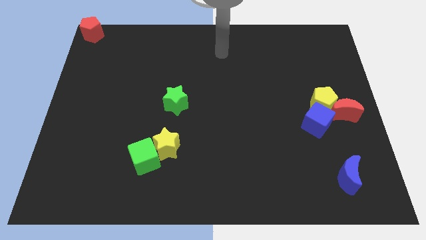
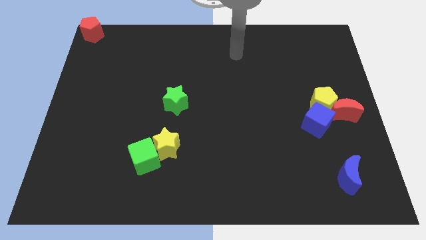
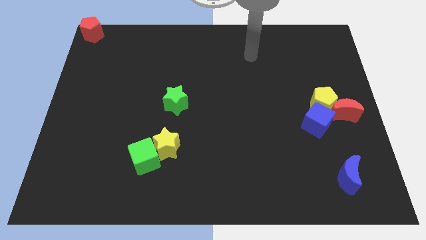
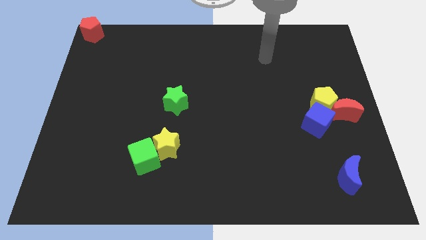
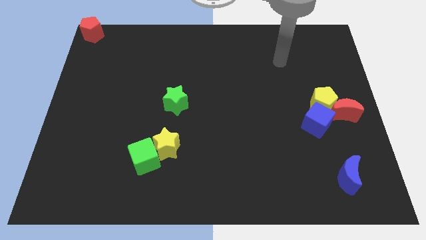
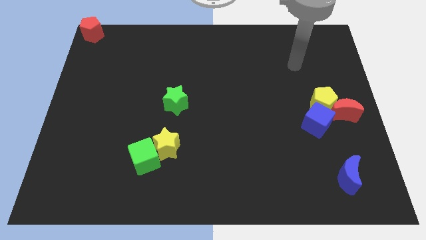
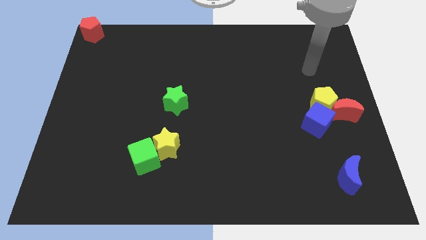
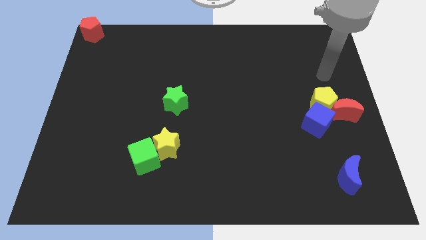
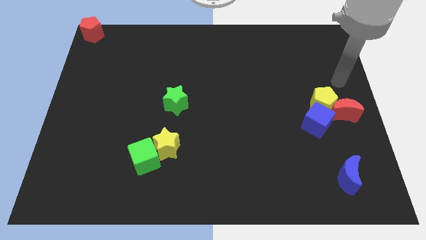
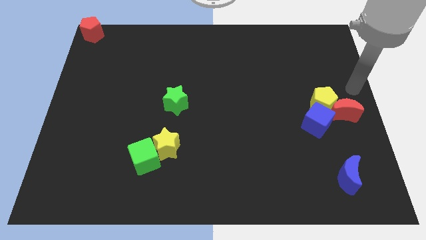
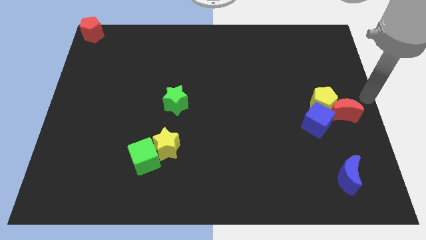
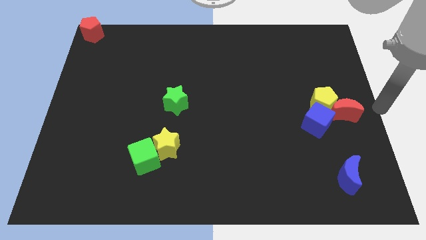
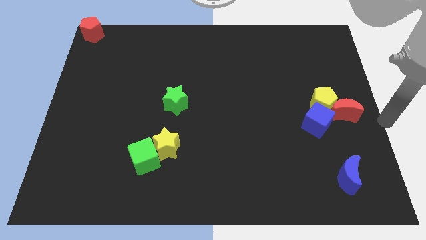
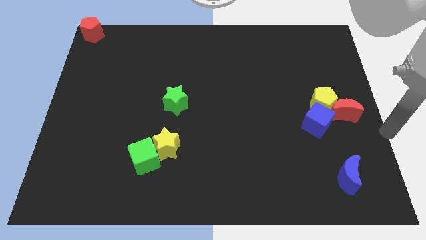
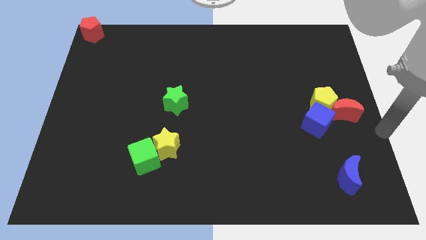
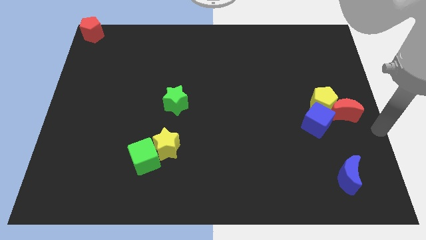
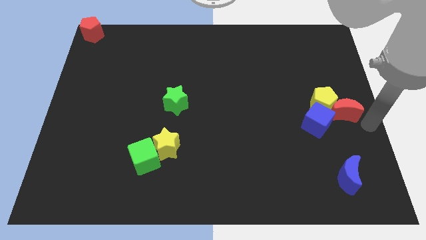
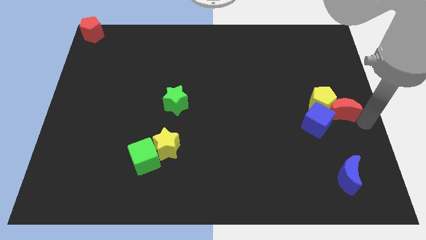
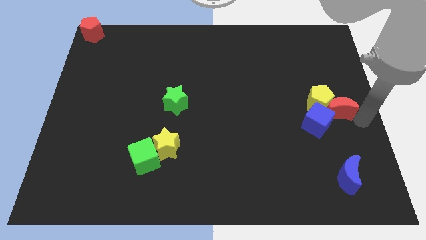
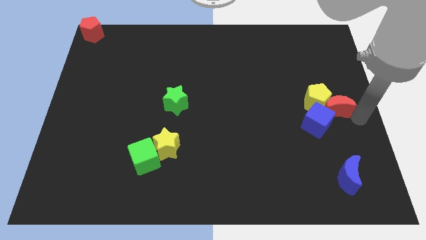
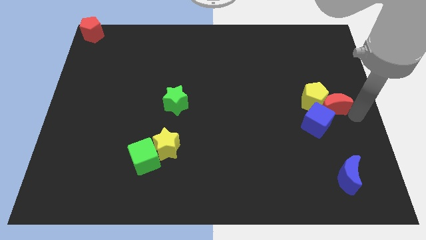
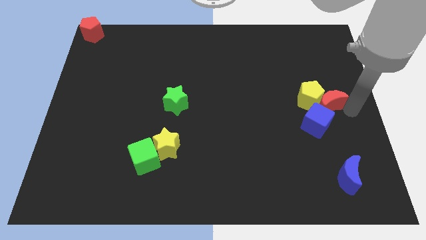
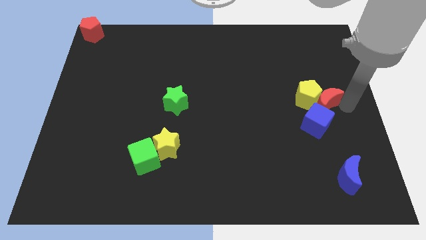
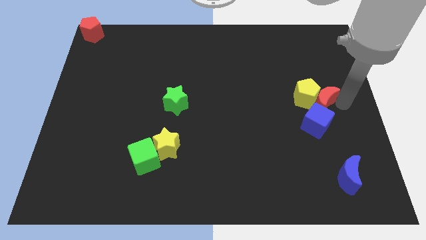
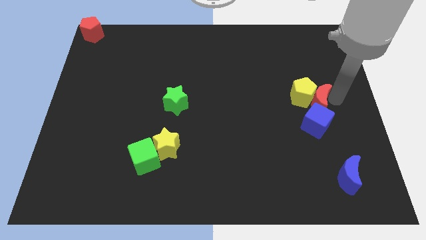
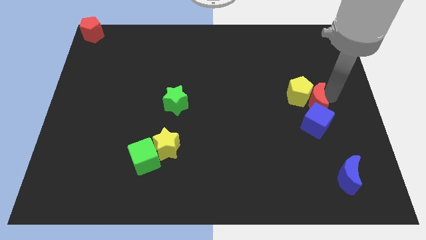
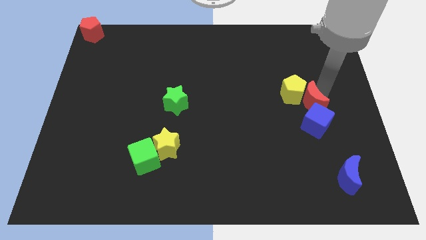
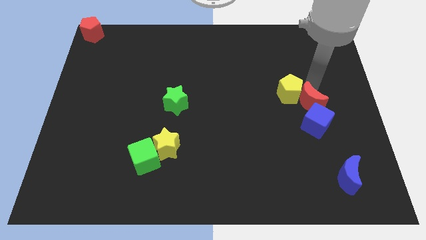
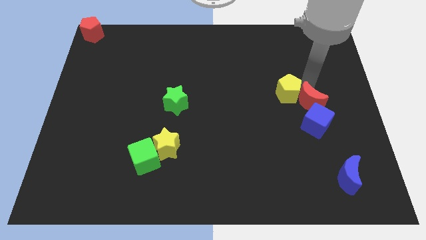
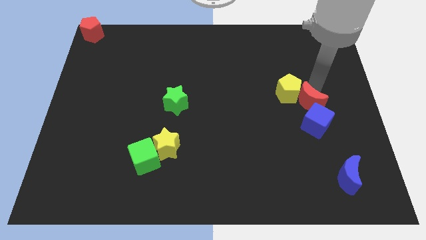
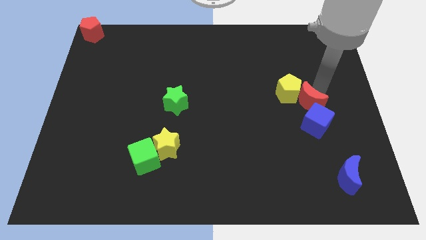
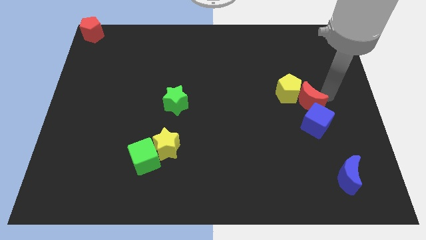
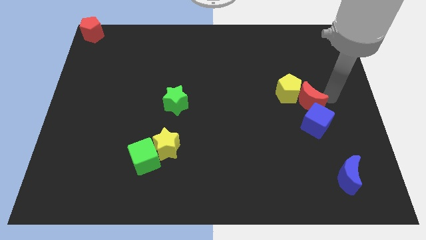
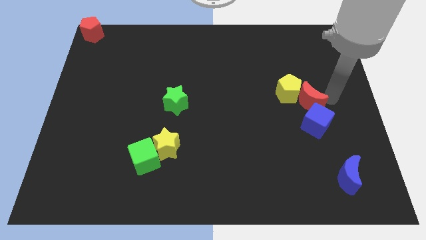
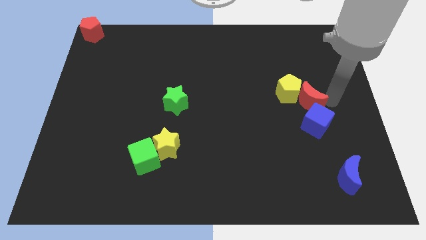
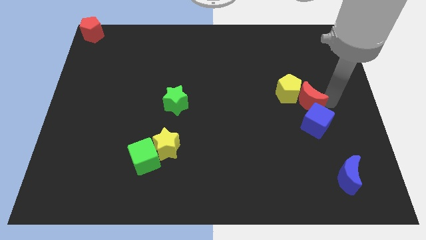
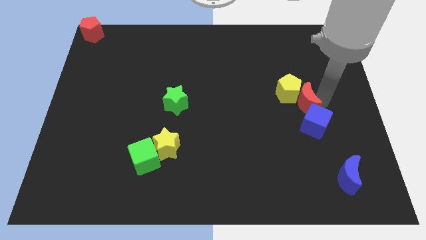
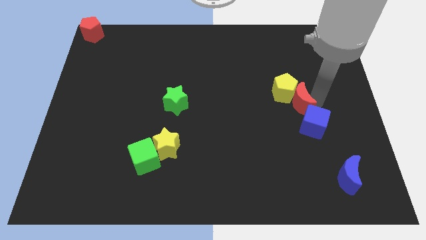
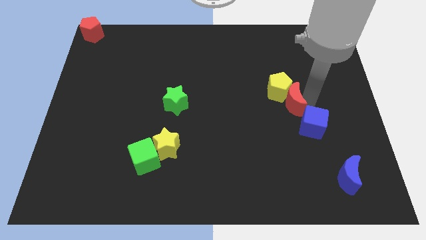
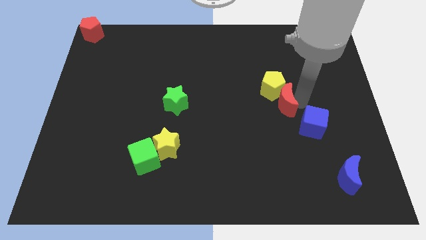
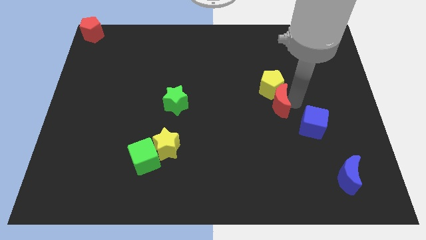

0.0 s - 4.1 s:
move red moon along with yellow pentagon towards left

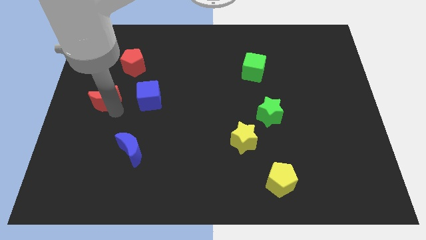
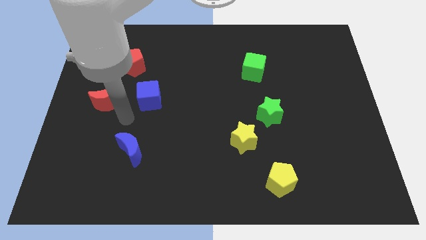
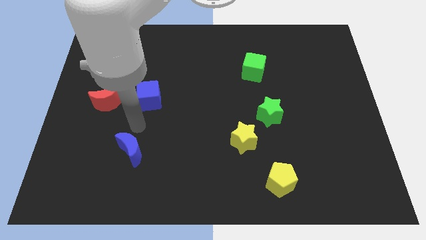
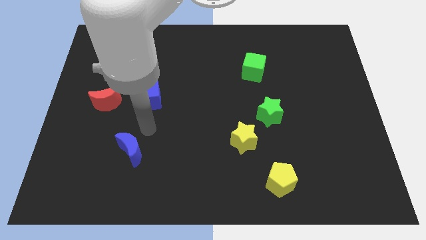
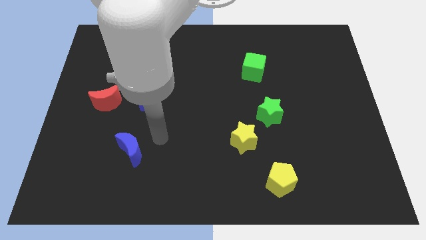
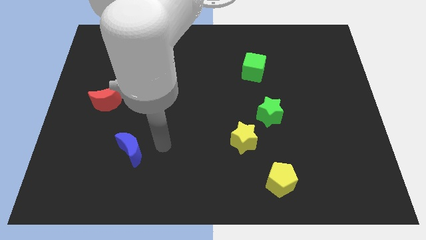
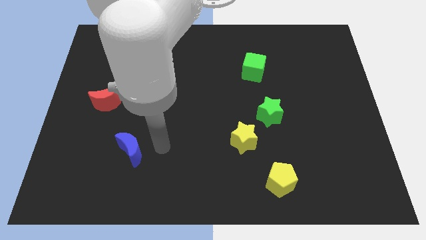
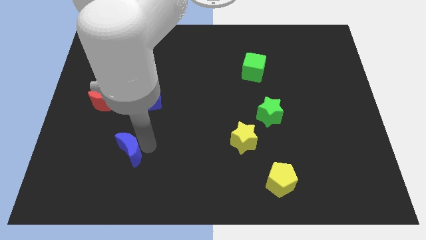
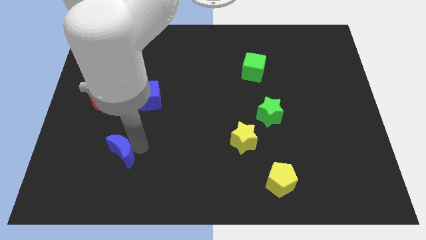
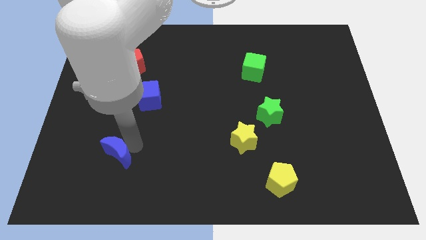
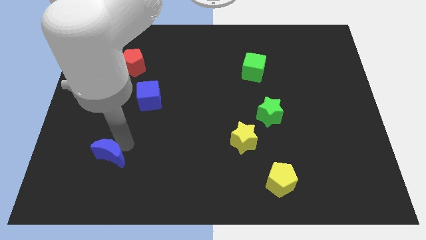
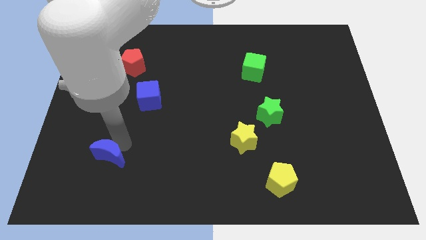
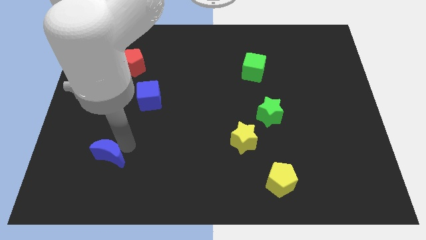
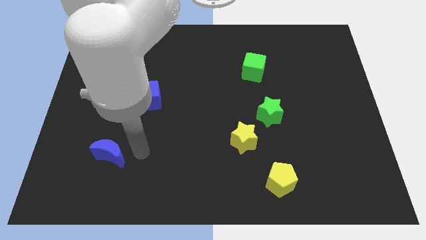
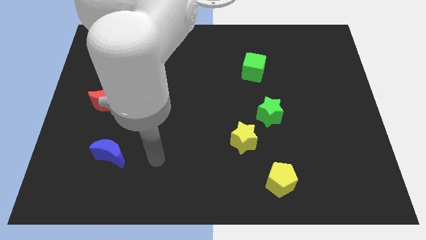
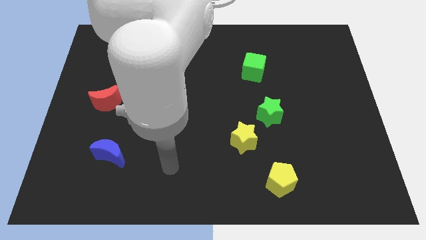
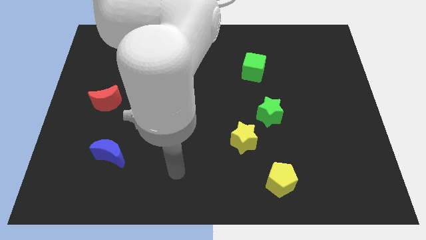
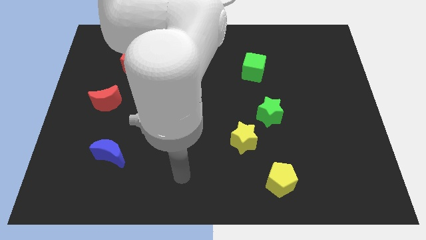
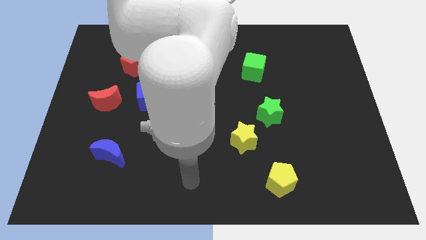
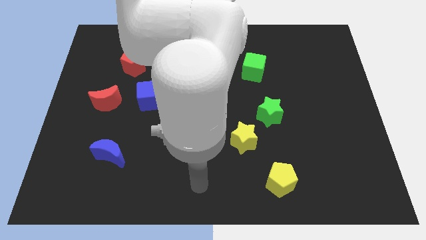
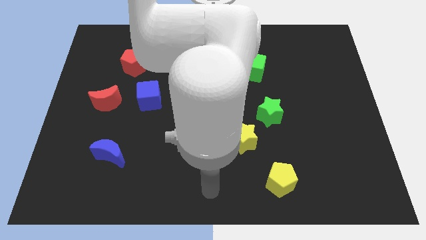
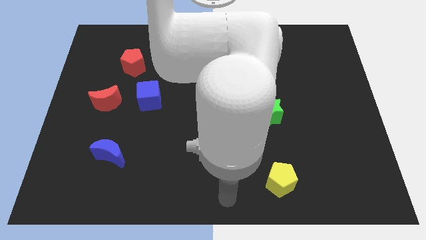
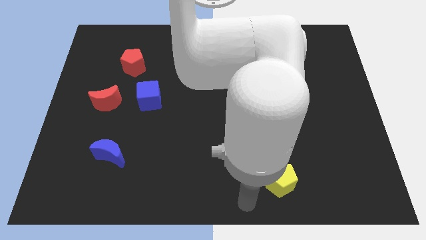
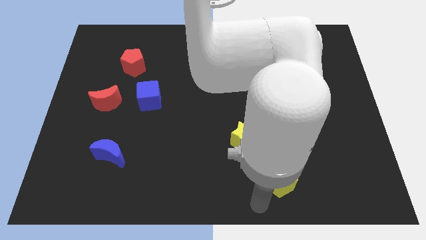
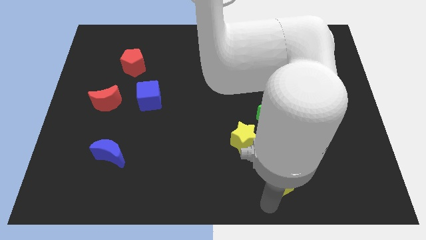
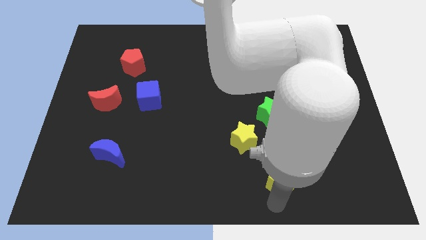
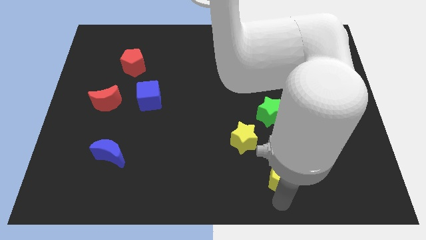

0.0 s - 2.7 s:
push the blue crescent below the red moon

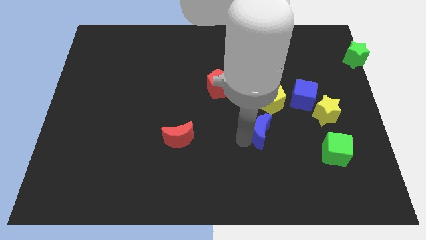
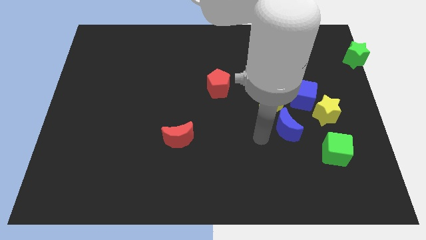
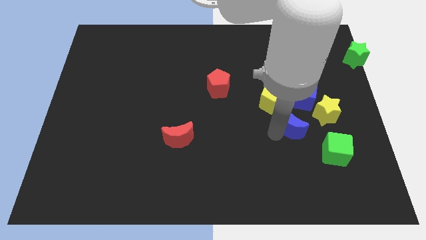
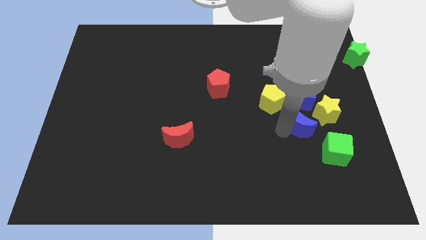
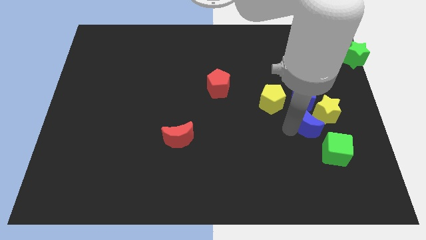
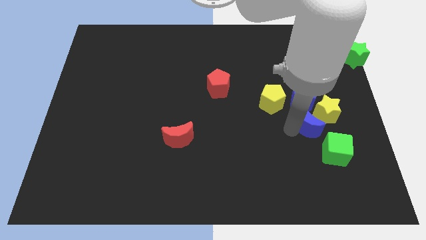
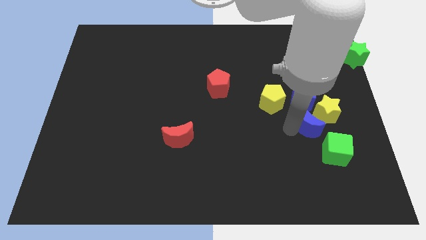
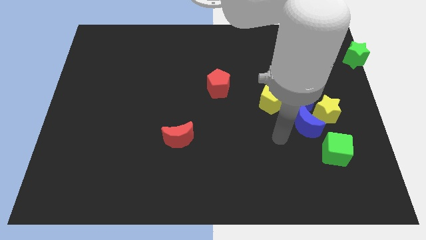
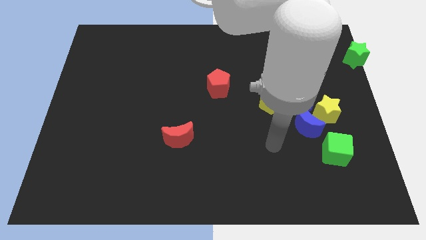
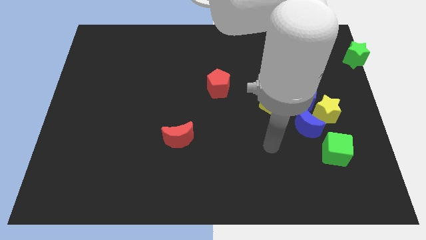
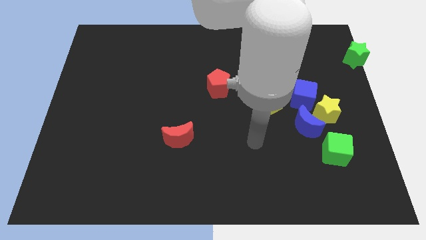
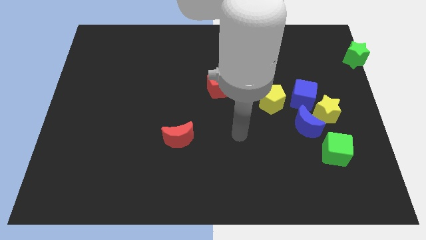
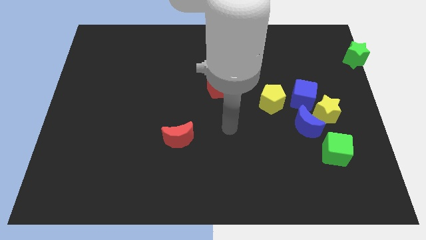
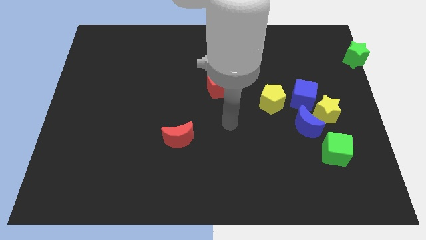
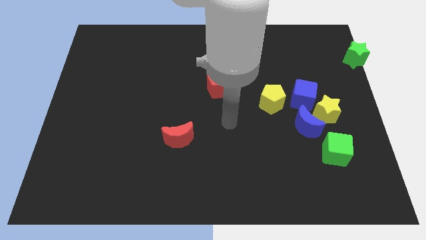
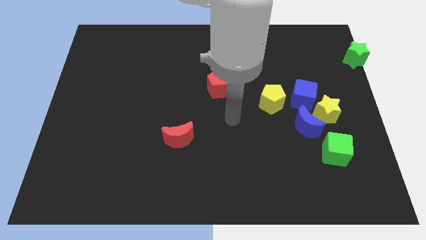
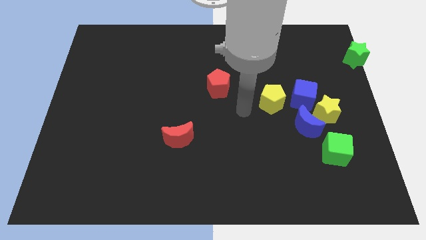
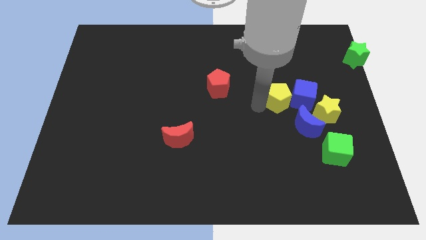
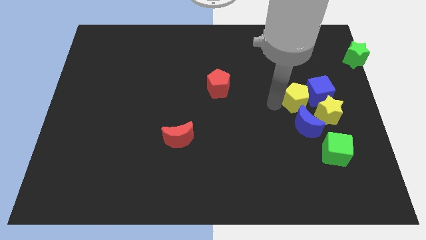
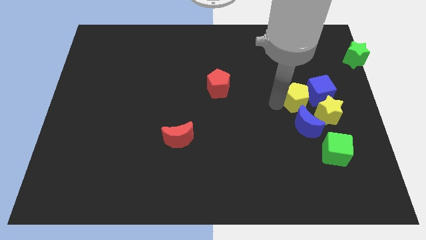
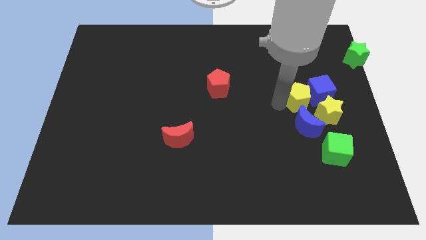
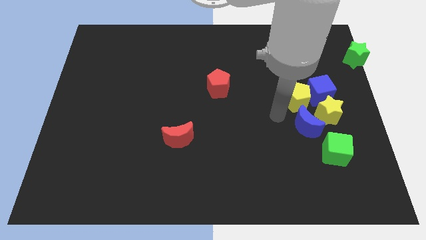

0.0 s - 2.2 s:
push the yellow pentagon into the blue cube
